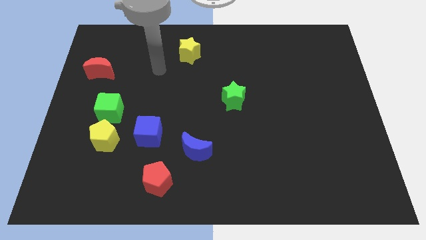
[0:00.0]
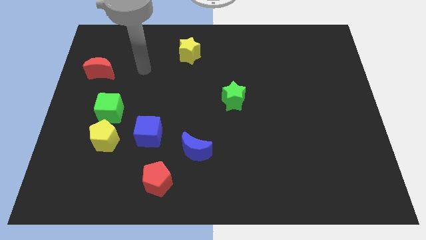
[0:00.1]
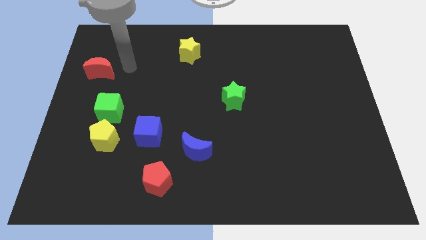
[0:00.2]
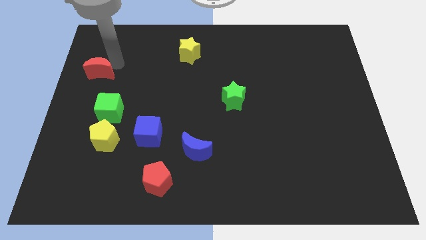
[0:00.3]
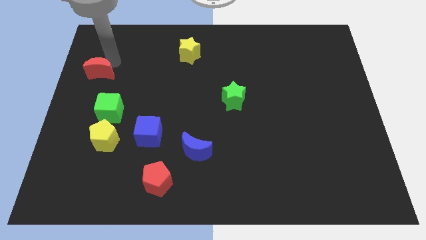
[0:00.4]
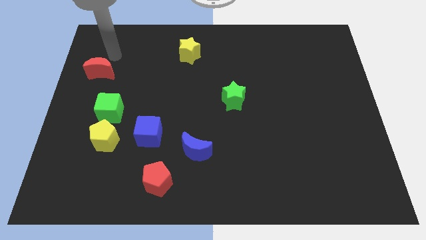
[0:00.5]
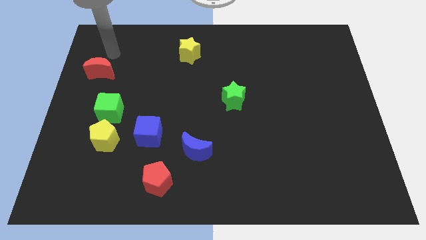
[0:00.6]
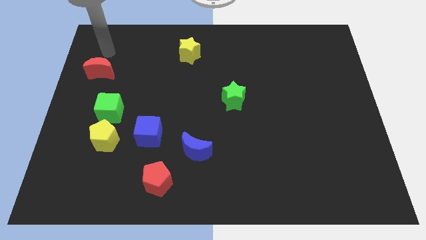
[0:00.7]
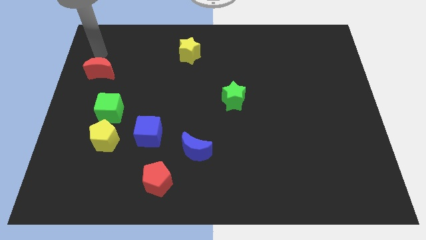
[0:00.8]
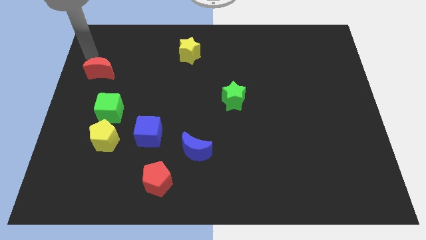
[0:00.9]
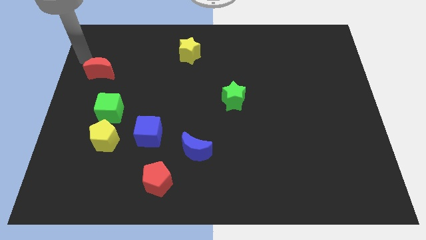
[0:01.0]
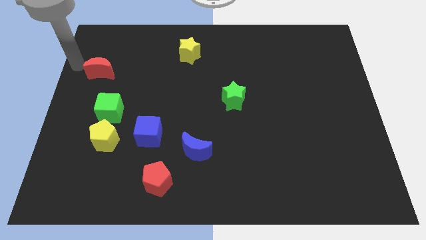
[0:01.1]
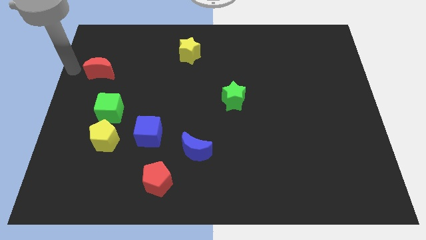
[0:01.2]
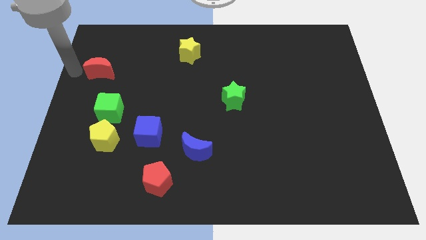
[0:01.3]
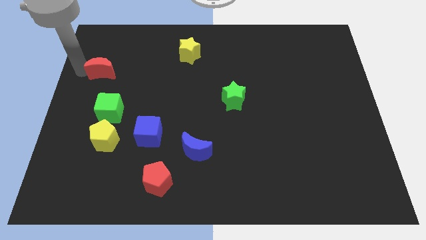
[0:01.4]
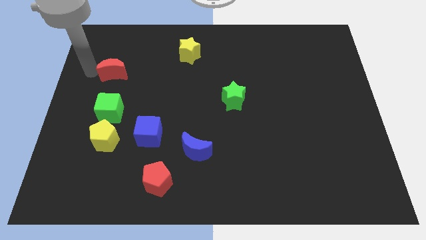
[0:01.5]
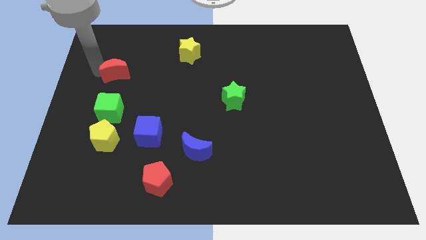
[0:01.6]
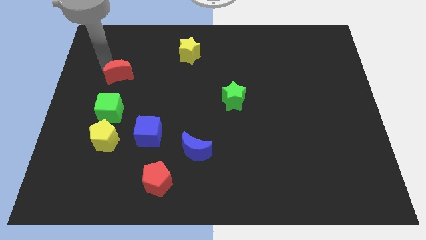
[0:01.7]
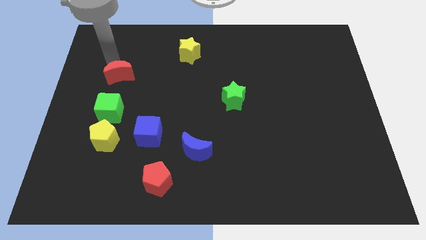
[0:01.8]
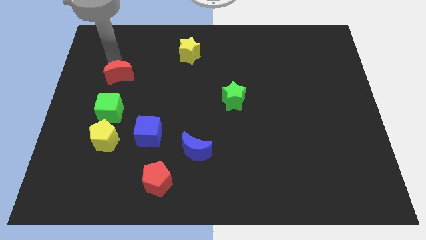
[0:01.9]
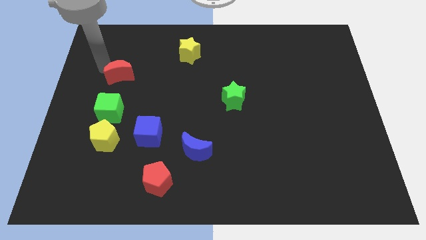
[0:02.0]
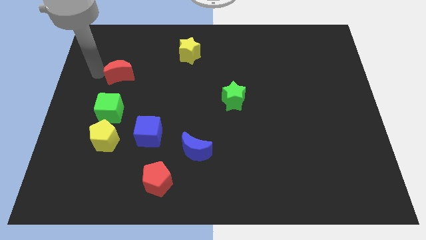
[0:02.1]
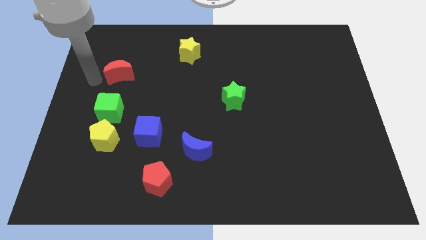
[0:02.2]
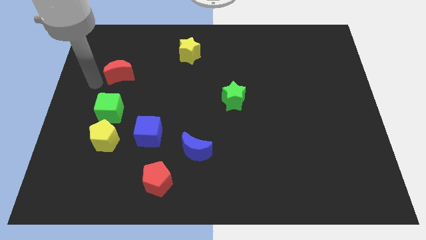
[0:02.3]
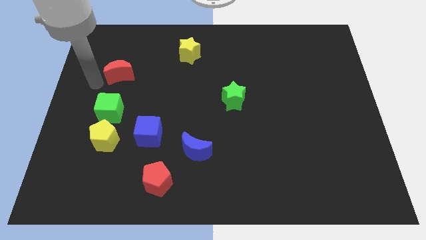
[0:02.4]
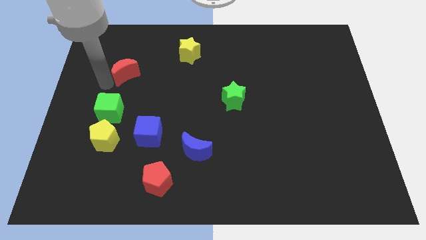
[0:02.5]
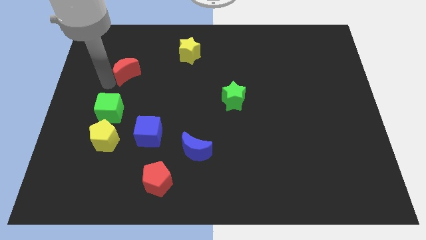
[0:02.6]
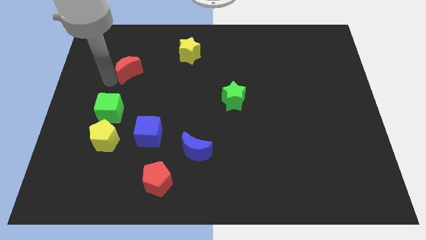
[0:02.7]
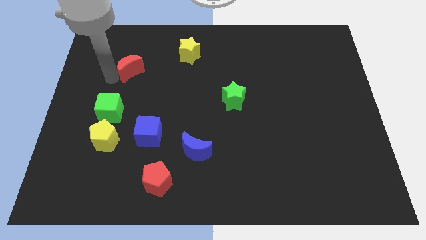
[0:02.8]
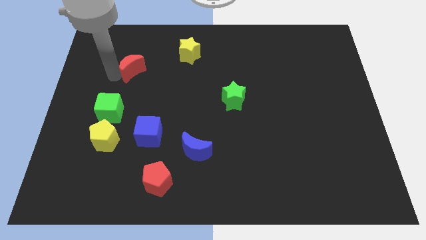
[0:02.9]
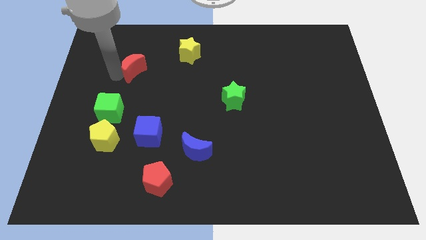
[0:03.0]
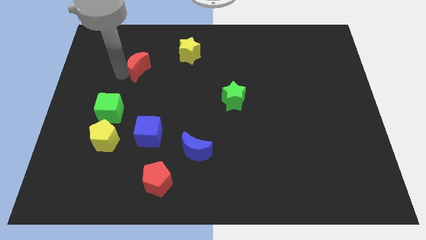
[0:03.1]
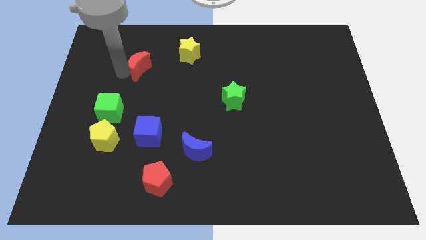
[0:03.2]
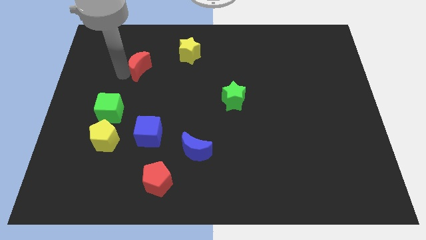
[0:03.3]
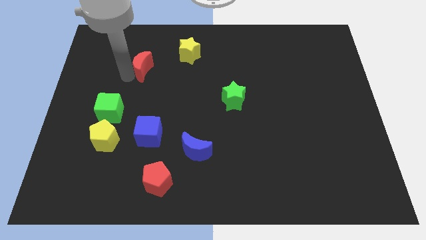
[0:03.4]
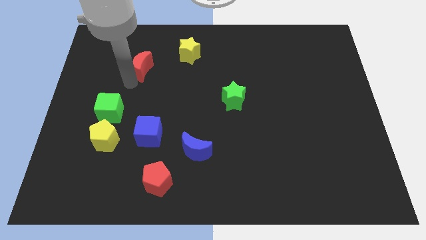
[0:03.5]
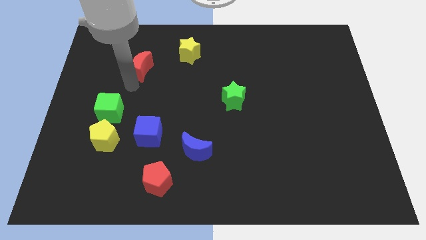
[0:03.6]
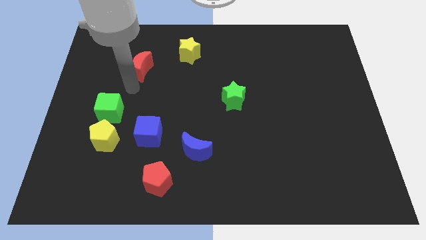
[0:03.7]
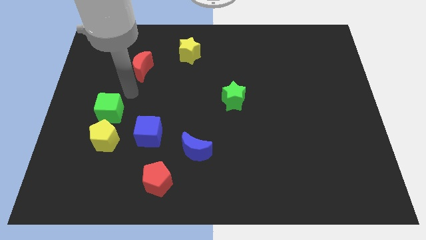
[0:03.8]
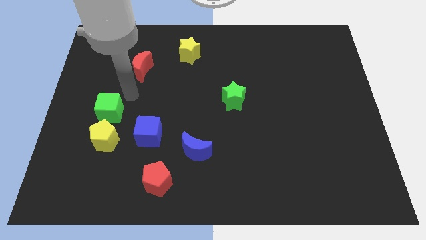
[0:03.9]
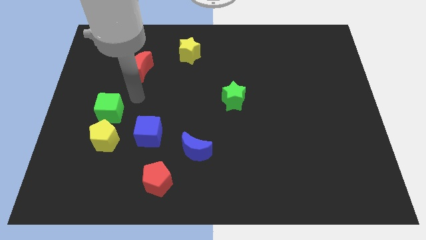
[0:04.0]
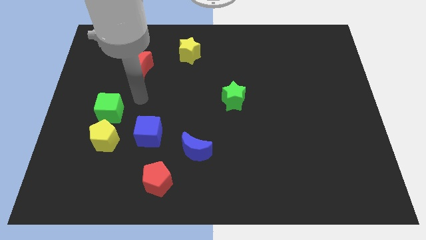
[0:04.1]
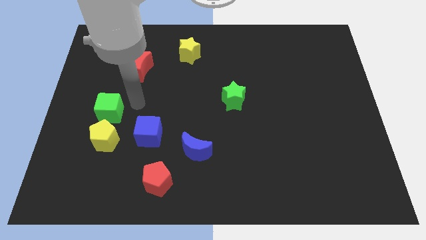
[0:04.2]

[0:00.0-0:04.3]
put the red crescent to the top right side of the green cube

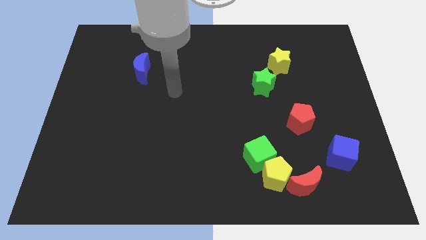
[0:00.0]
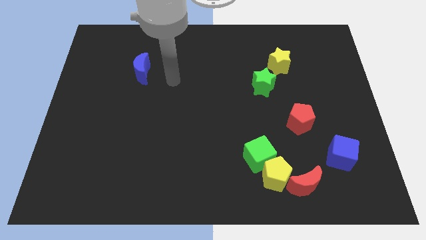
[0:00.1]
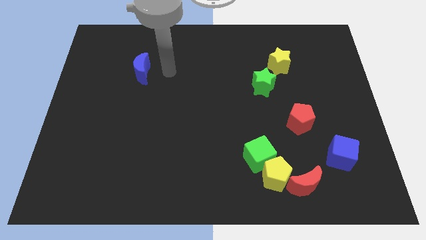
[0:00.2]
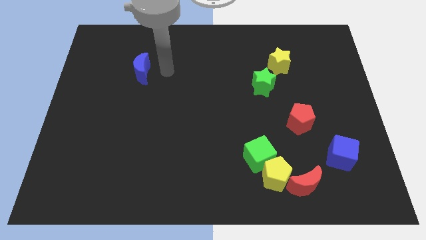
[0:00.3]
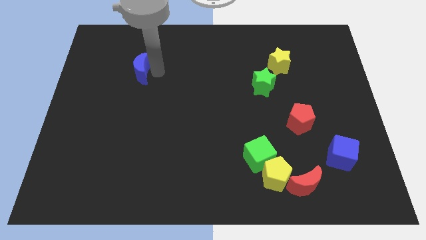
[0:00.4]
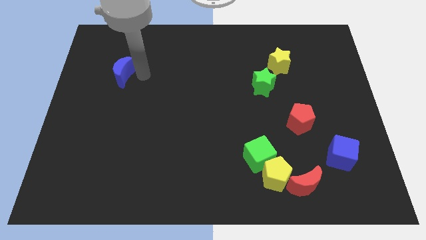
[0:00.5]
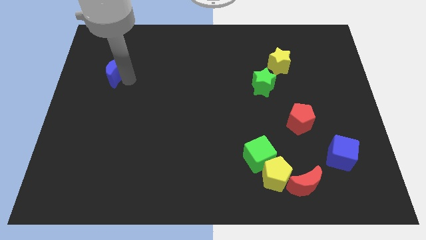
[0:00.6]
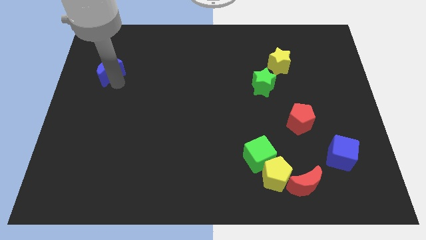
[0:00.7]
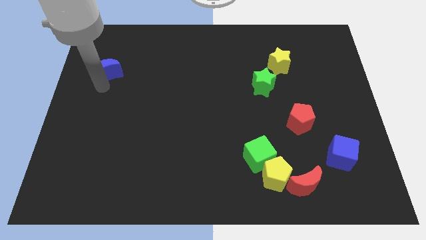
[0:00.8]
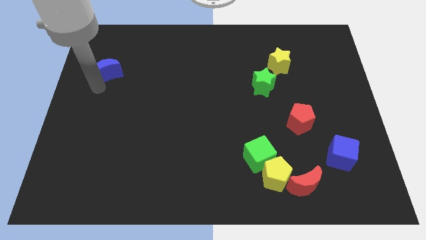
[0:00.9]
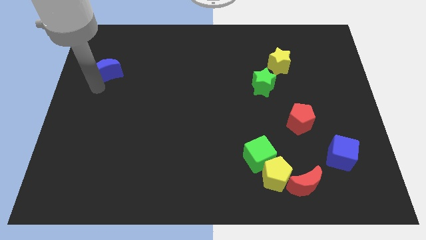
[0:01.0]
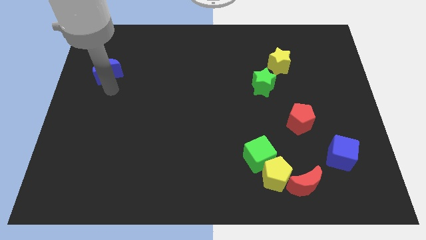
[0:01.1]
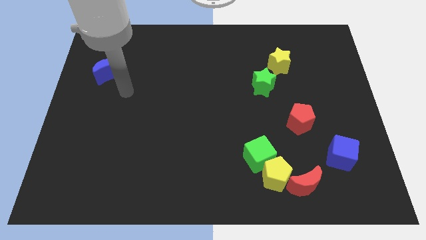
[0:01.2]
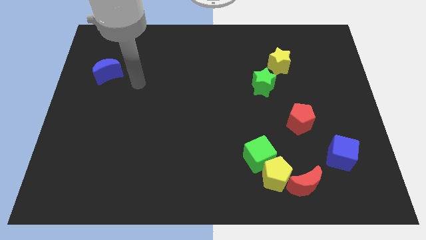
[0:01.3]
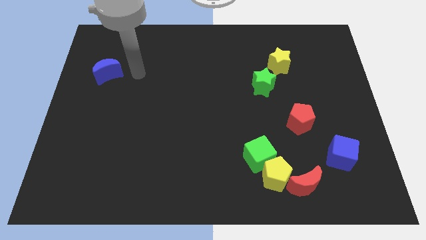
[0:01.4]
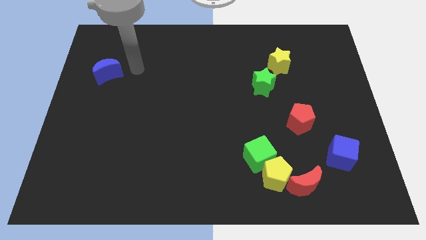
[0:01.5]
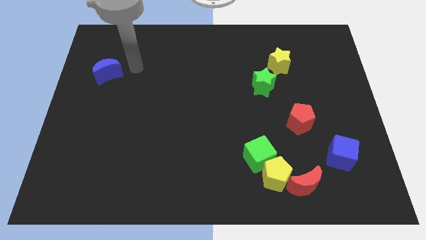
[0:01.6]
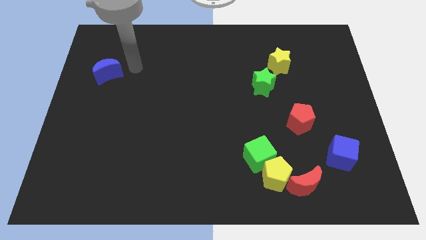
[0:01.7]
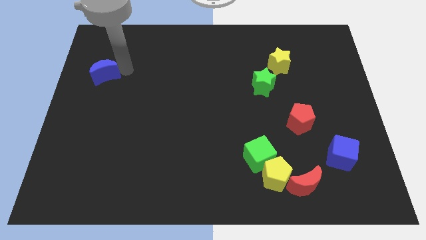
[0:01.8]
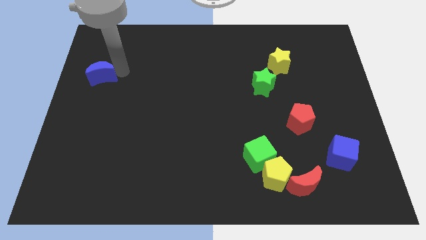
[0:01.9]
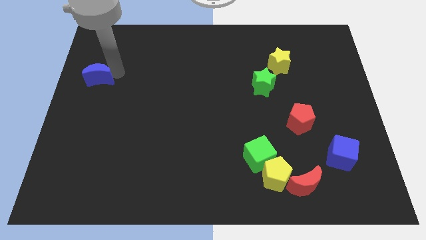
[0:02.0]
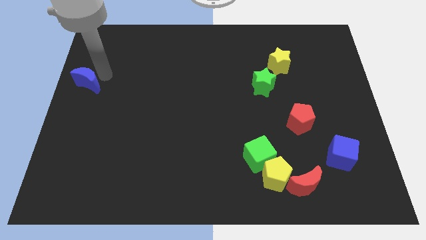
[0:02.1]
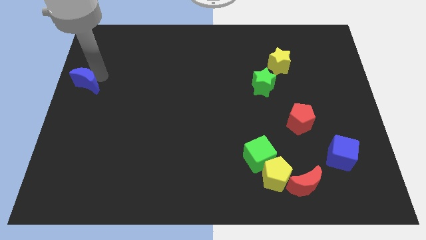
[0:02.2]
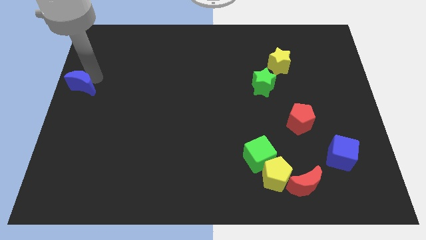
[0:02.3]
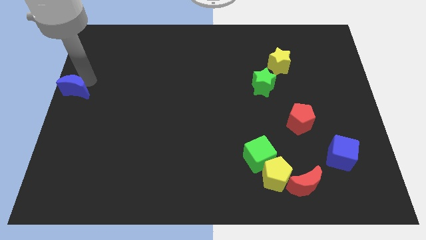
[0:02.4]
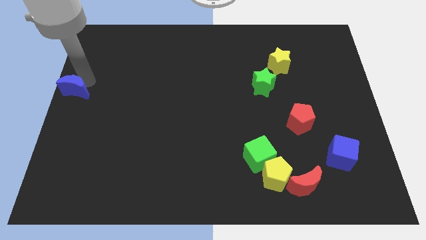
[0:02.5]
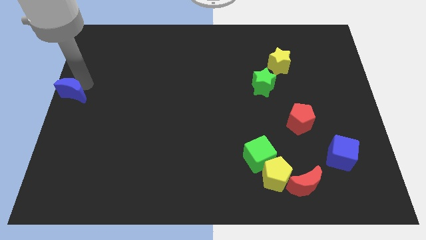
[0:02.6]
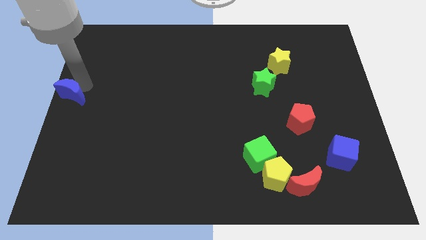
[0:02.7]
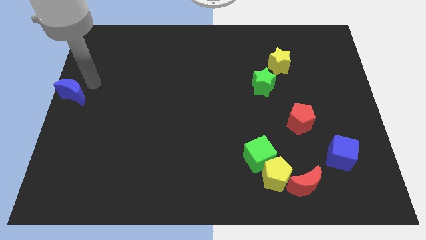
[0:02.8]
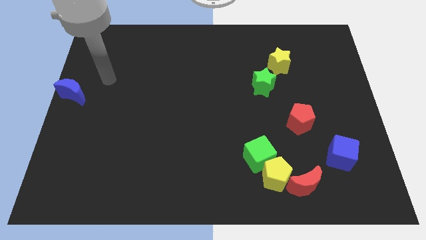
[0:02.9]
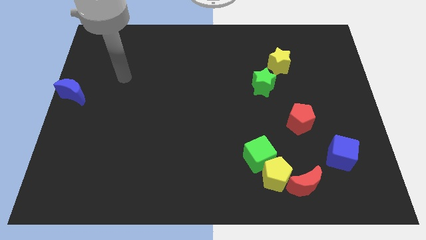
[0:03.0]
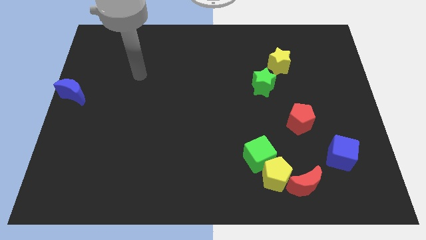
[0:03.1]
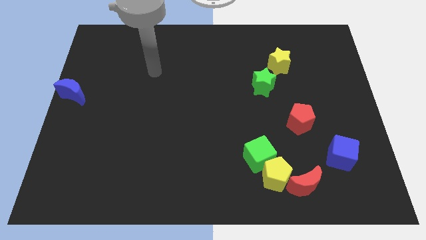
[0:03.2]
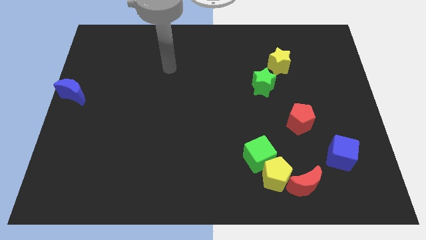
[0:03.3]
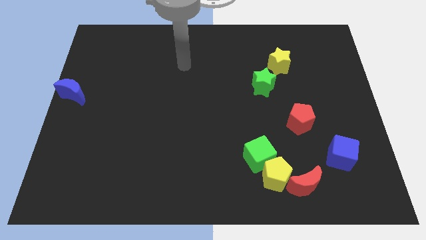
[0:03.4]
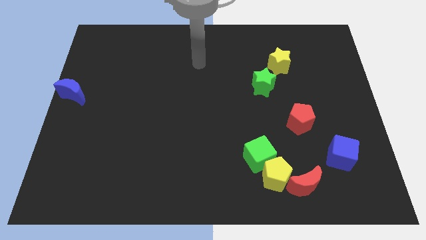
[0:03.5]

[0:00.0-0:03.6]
push the blue crescent to the left center

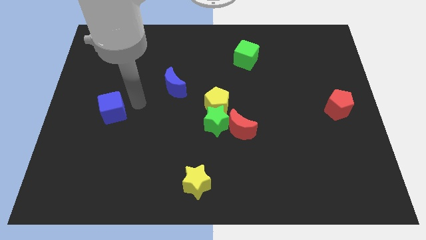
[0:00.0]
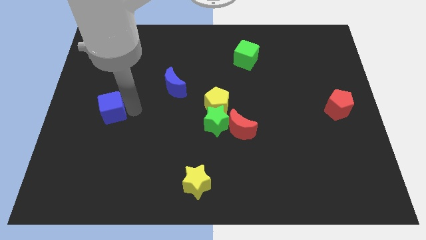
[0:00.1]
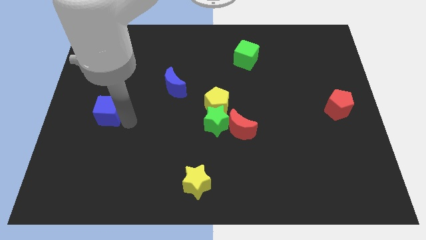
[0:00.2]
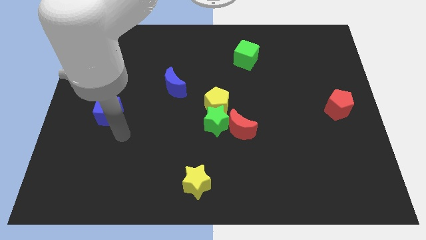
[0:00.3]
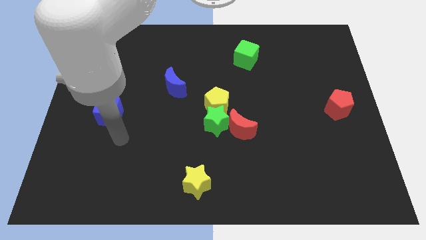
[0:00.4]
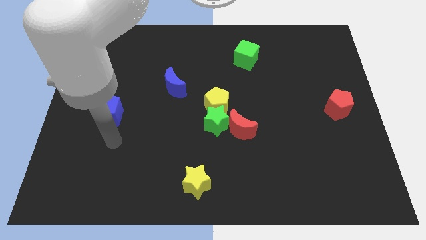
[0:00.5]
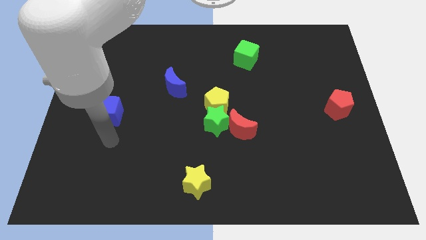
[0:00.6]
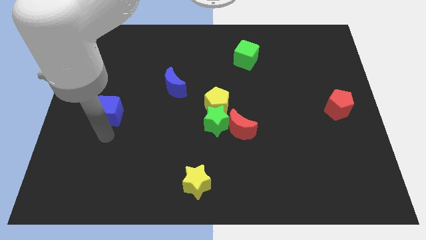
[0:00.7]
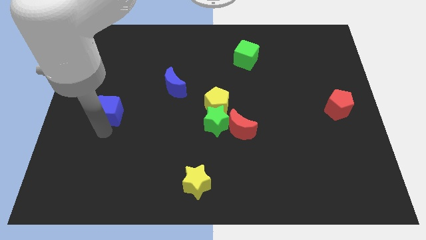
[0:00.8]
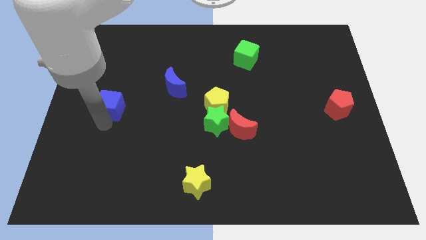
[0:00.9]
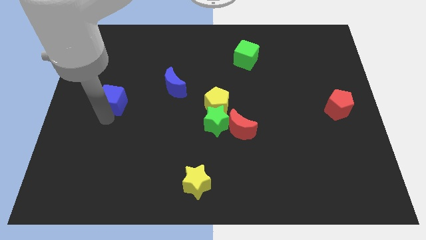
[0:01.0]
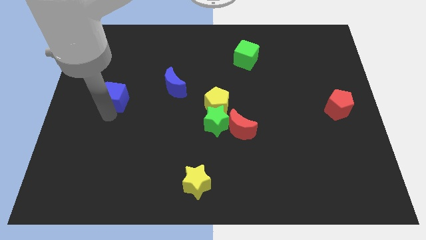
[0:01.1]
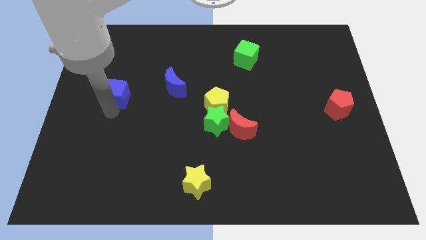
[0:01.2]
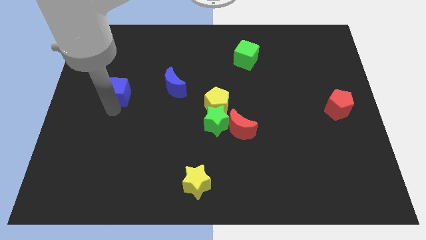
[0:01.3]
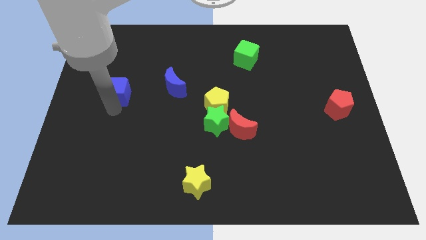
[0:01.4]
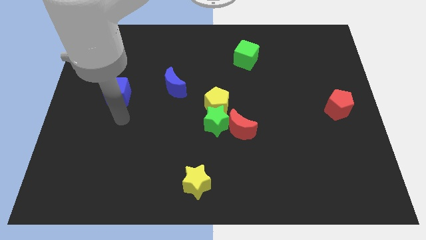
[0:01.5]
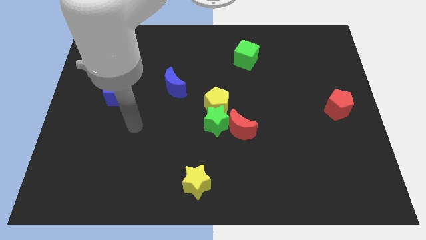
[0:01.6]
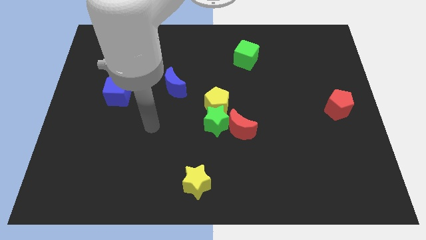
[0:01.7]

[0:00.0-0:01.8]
move blue cube slightly towards top of the board
